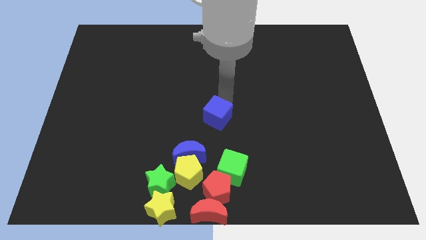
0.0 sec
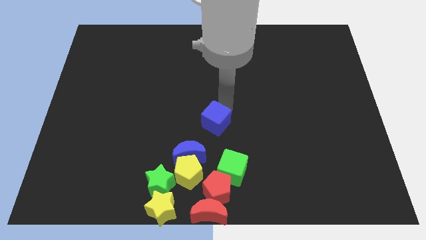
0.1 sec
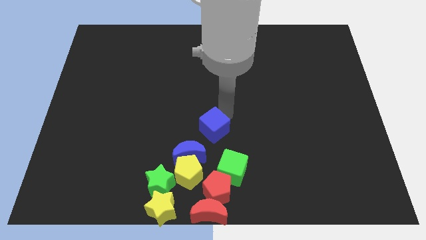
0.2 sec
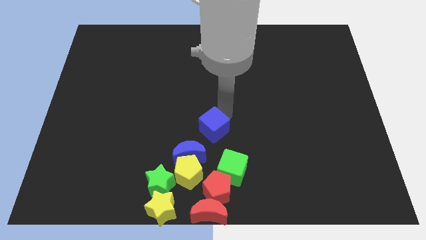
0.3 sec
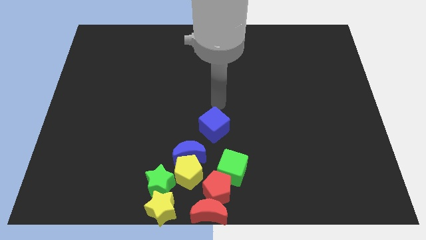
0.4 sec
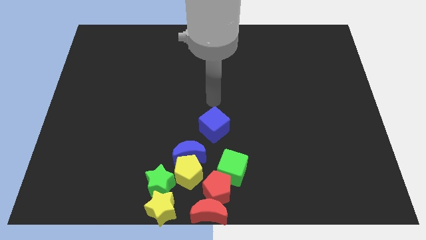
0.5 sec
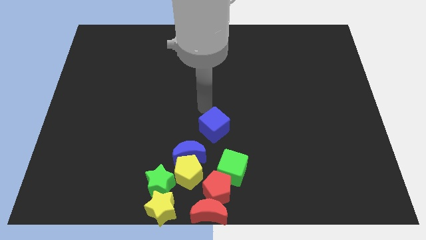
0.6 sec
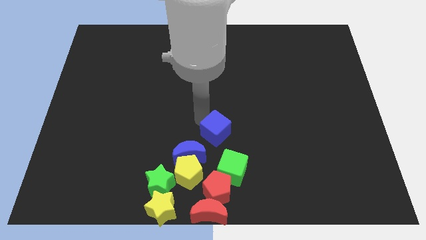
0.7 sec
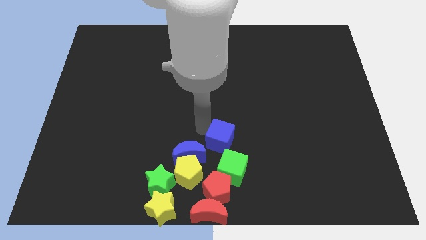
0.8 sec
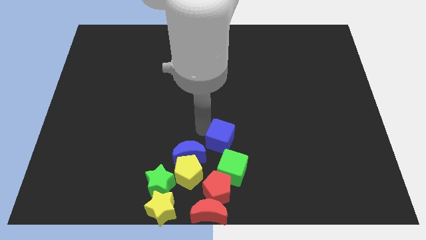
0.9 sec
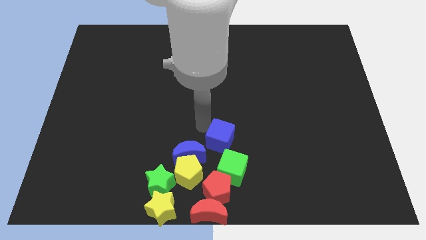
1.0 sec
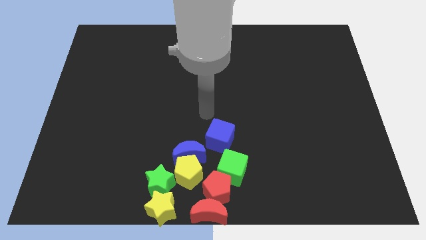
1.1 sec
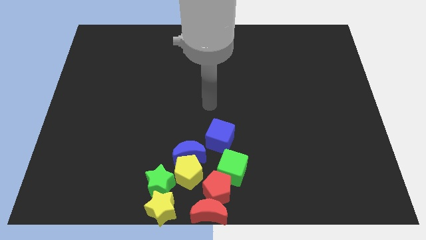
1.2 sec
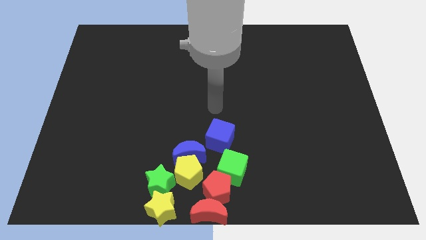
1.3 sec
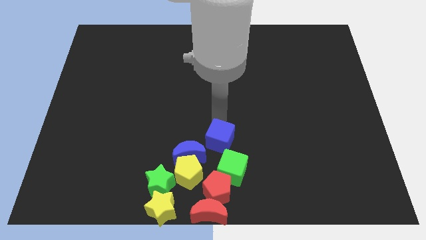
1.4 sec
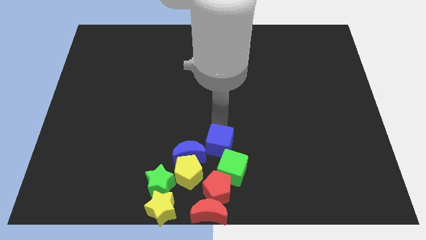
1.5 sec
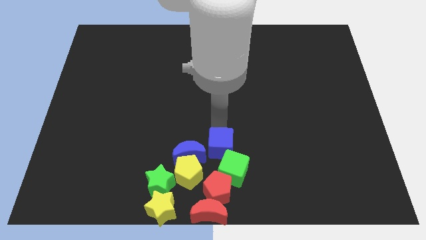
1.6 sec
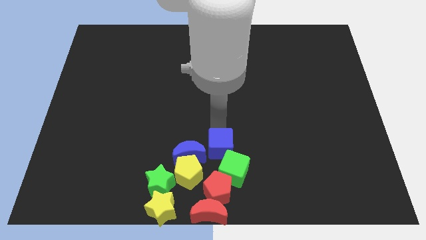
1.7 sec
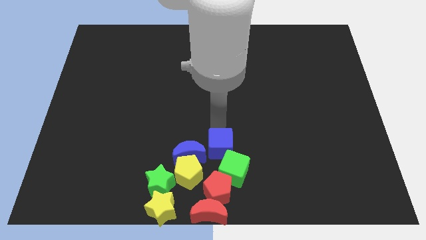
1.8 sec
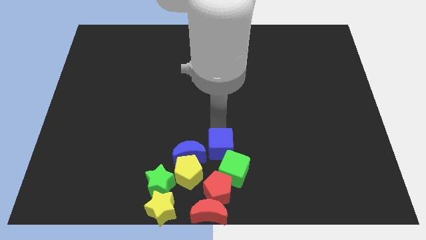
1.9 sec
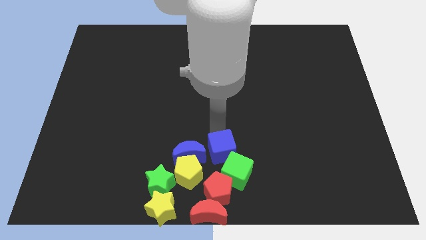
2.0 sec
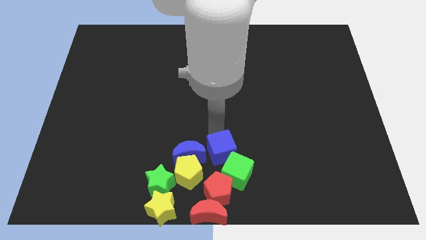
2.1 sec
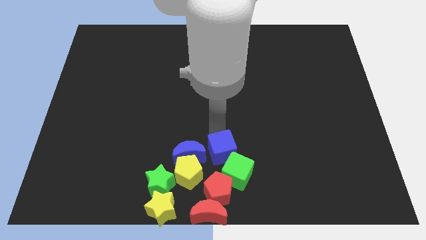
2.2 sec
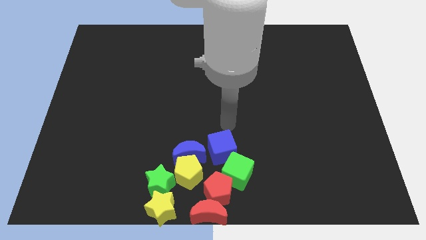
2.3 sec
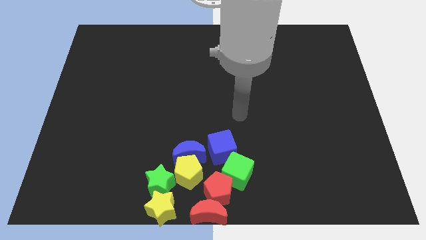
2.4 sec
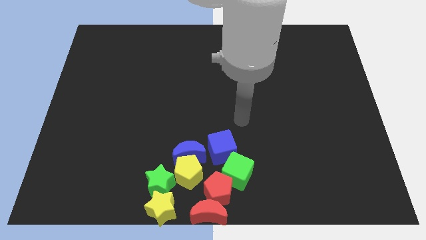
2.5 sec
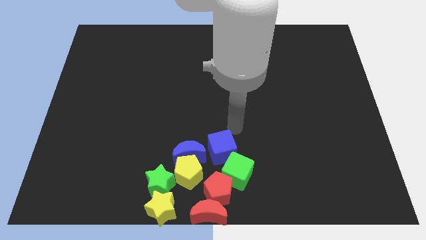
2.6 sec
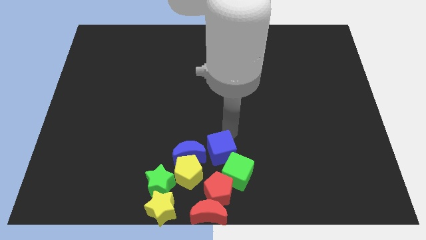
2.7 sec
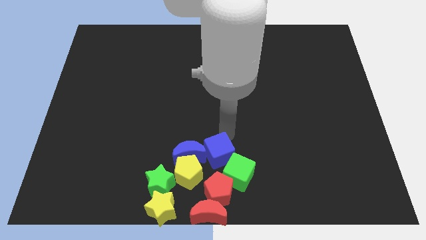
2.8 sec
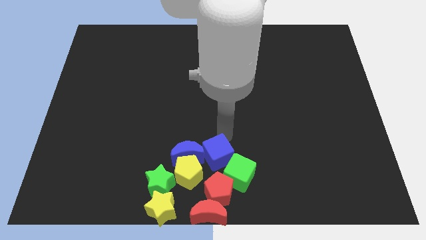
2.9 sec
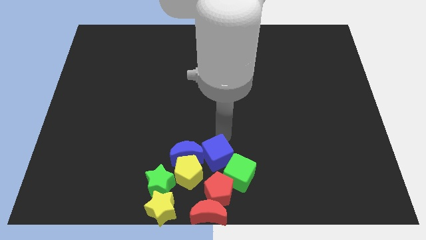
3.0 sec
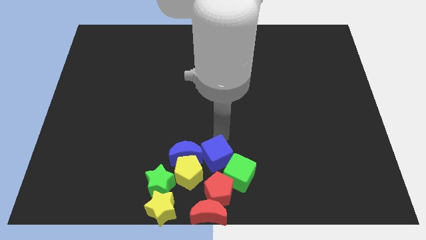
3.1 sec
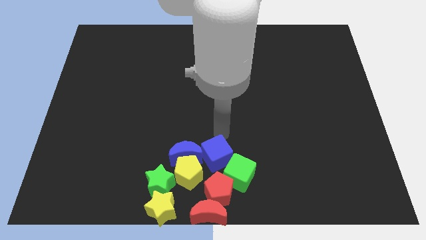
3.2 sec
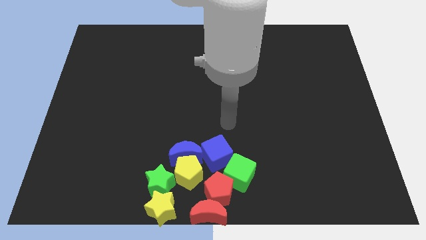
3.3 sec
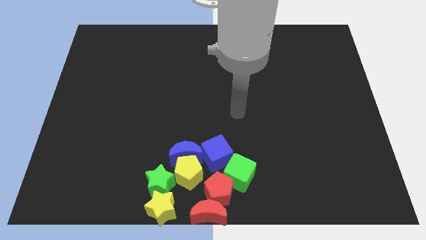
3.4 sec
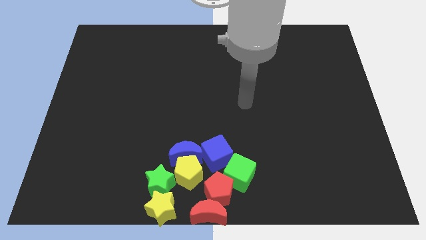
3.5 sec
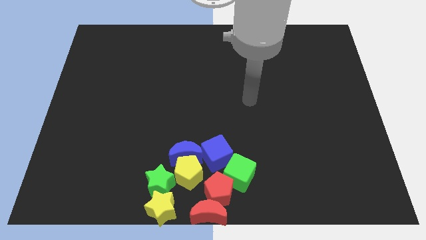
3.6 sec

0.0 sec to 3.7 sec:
move the blue cube into group of blocks

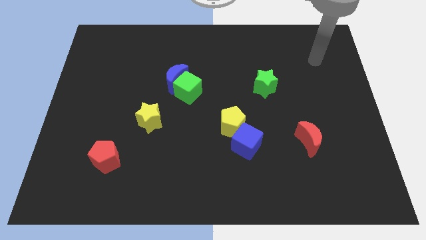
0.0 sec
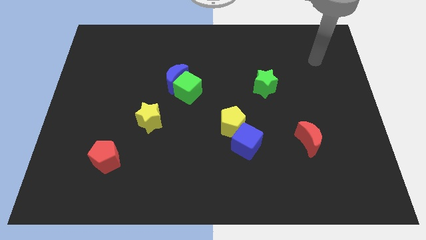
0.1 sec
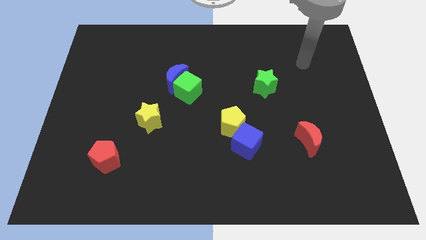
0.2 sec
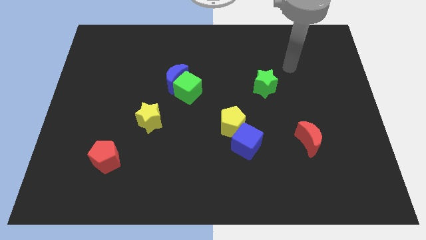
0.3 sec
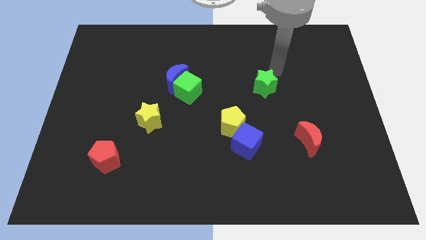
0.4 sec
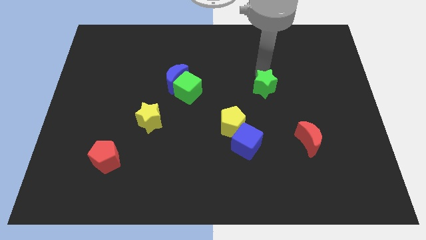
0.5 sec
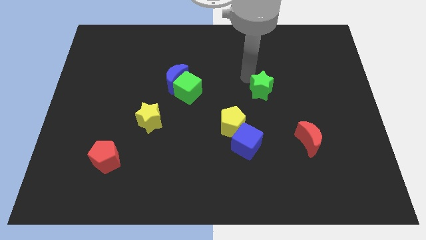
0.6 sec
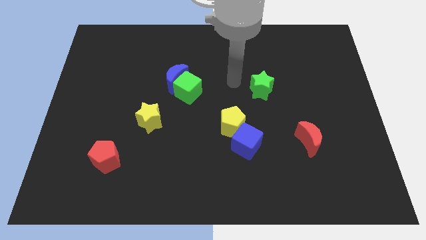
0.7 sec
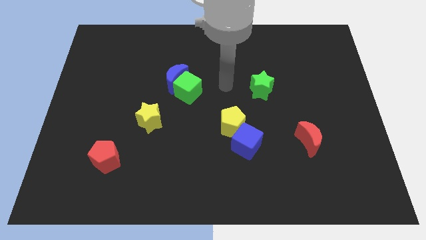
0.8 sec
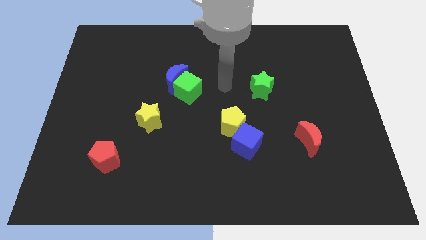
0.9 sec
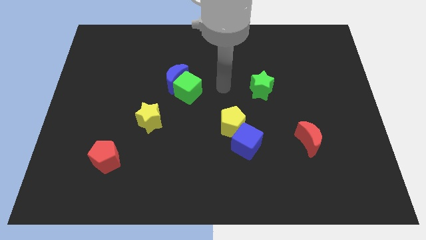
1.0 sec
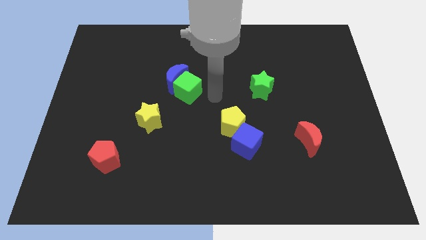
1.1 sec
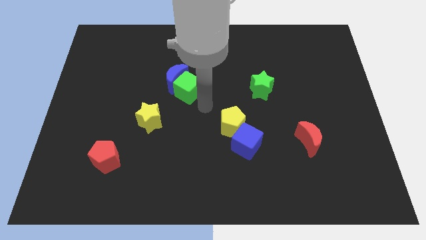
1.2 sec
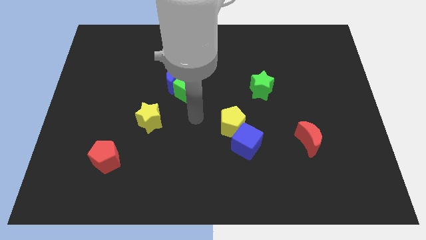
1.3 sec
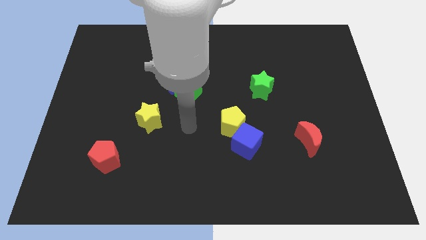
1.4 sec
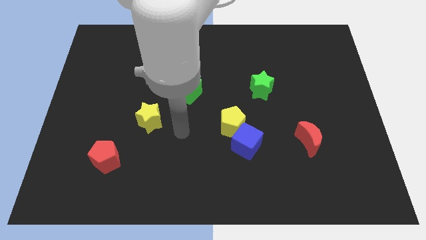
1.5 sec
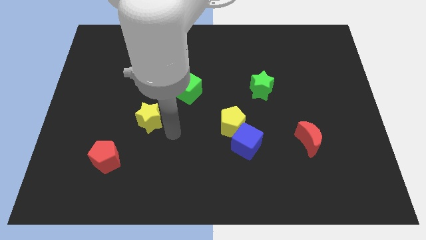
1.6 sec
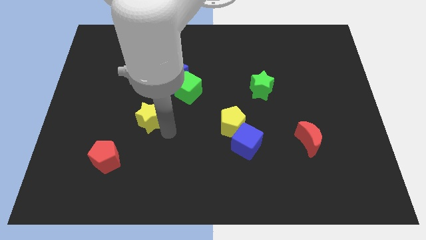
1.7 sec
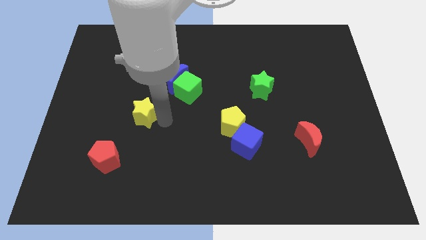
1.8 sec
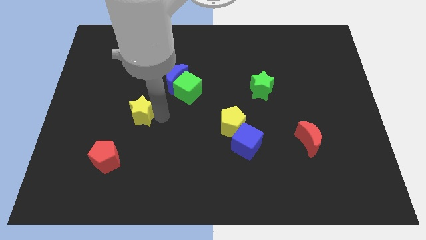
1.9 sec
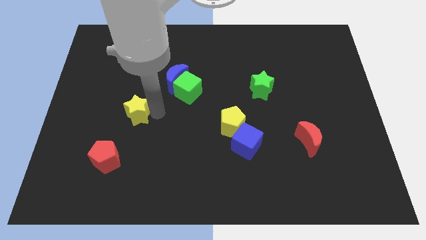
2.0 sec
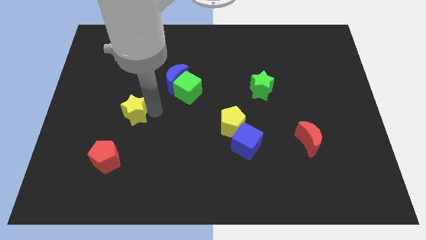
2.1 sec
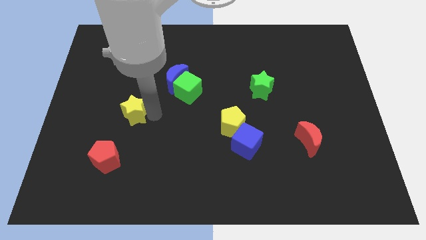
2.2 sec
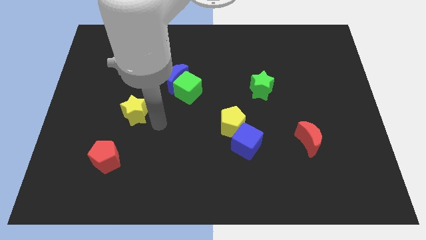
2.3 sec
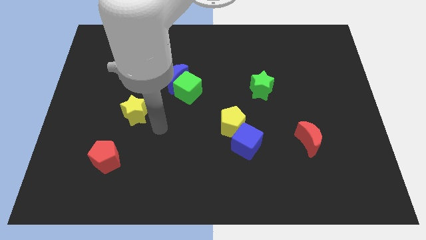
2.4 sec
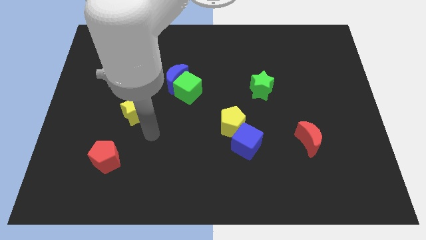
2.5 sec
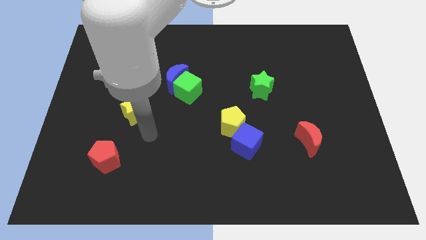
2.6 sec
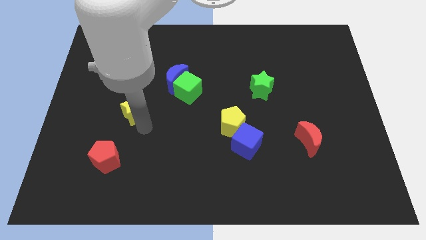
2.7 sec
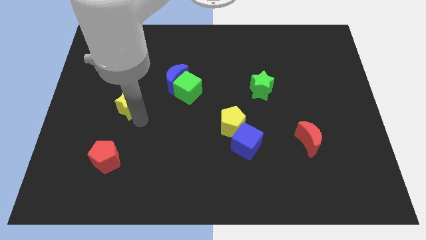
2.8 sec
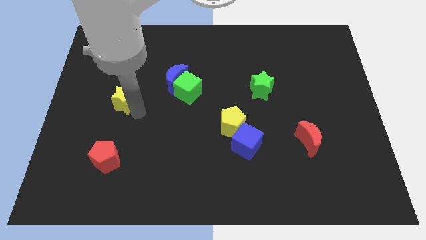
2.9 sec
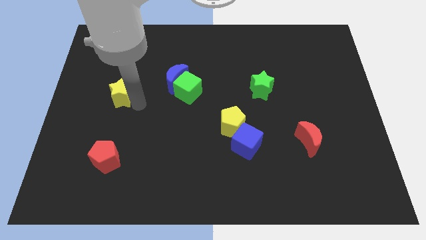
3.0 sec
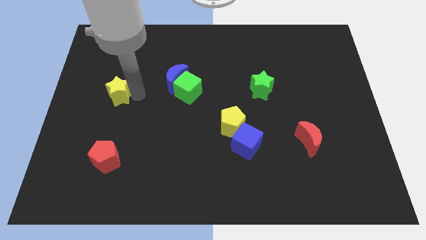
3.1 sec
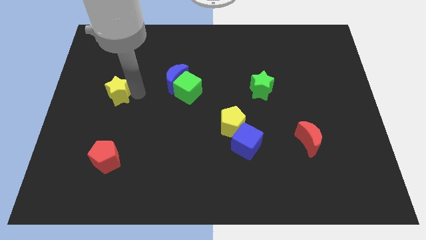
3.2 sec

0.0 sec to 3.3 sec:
slide the yellow star vertically above the red pentagon

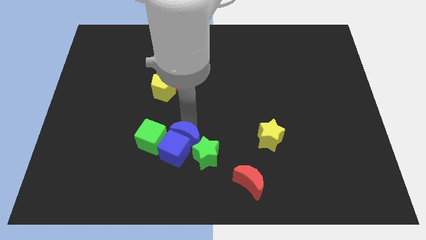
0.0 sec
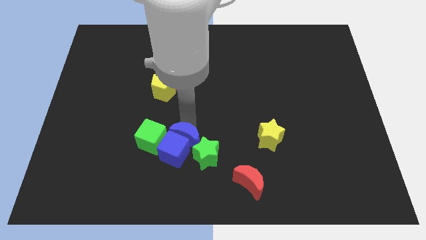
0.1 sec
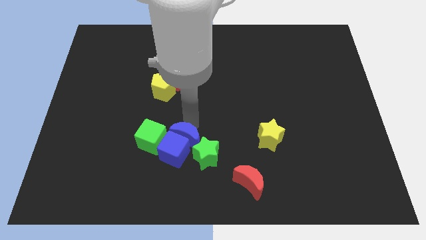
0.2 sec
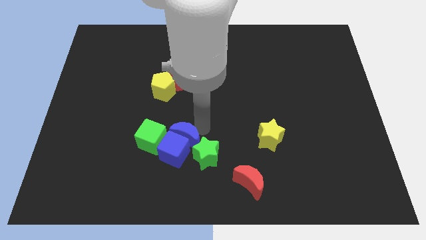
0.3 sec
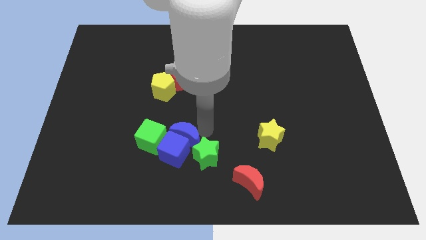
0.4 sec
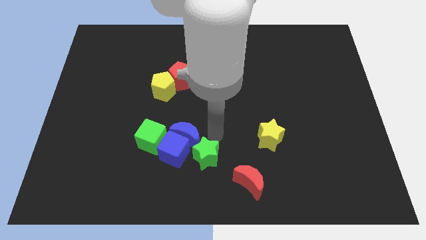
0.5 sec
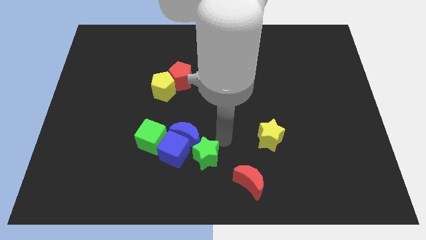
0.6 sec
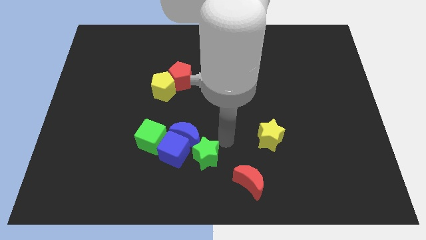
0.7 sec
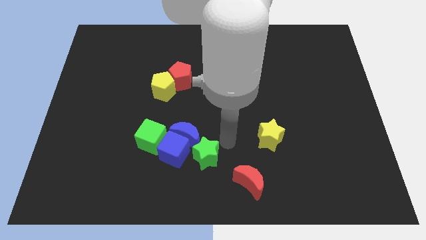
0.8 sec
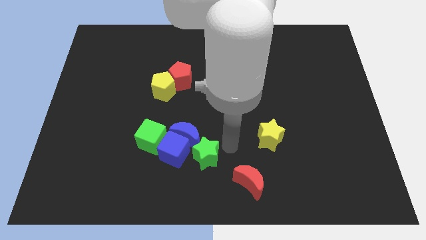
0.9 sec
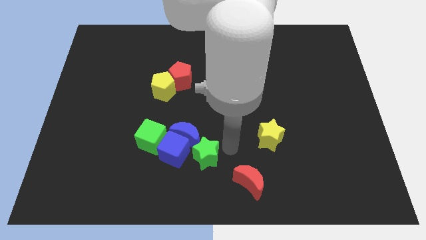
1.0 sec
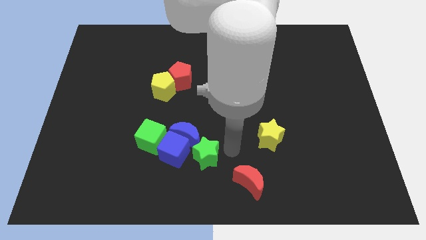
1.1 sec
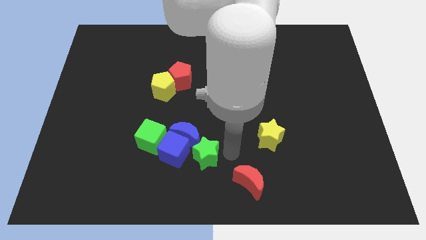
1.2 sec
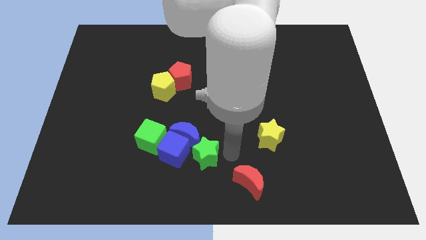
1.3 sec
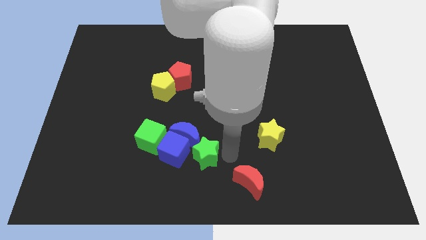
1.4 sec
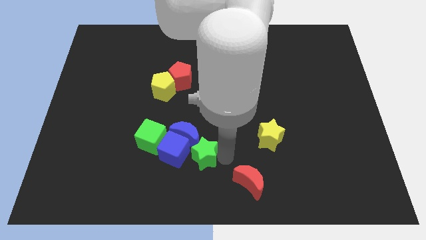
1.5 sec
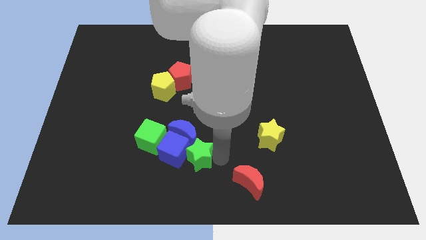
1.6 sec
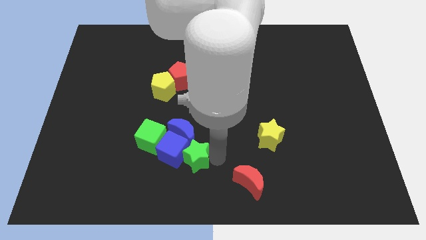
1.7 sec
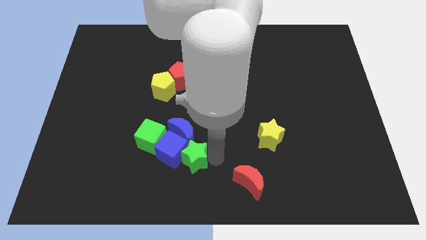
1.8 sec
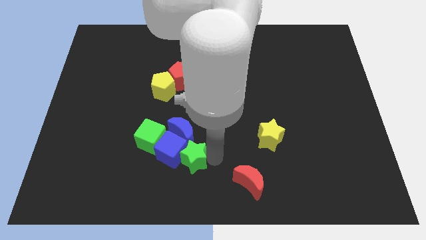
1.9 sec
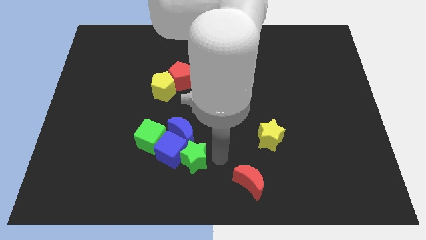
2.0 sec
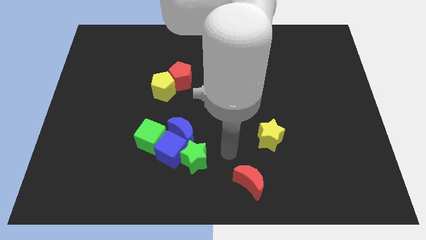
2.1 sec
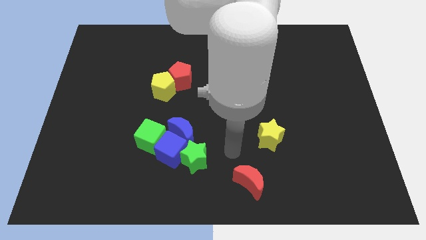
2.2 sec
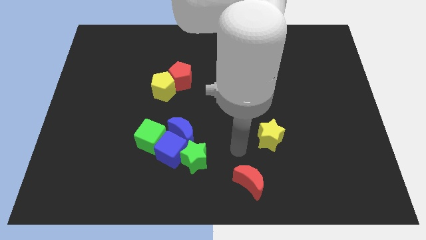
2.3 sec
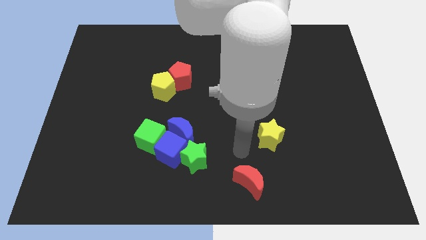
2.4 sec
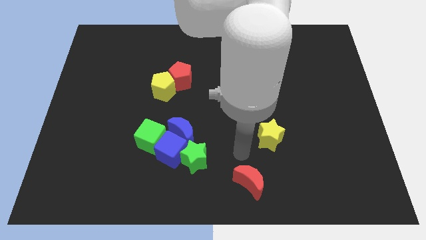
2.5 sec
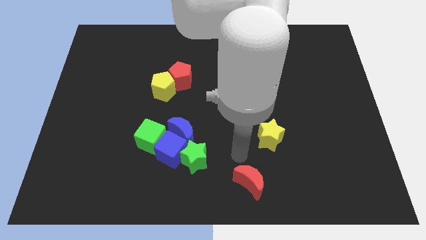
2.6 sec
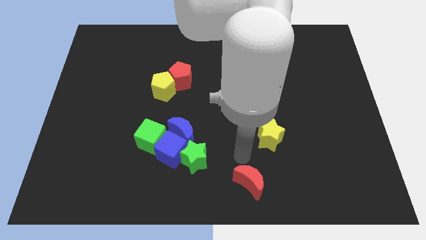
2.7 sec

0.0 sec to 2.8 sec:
push the green star slightly to the left
